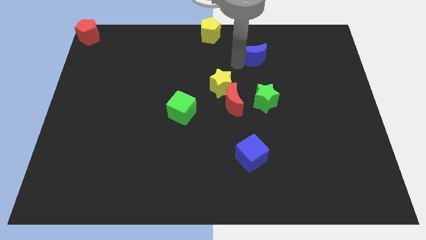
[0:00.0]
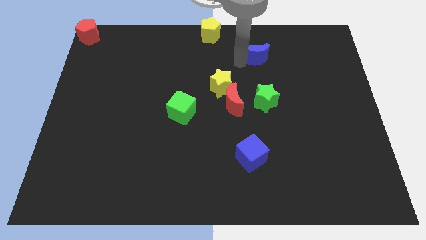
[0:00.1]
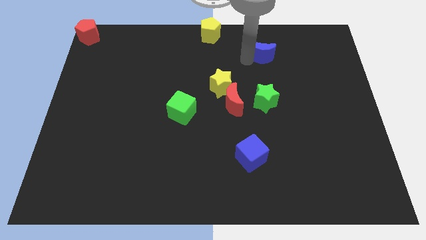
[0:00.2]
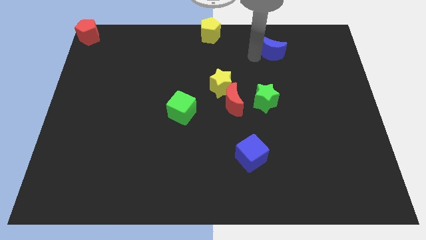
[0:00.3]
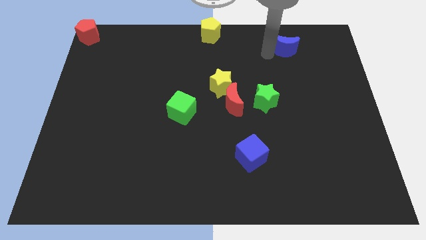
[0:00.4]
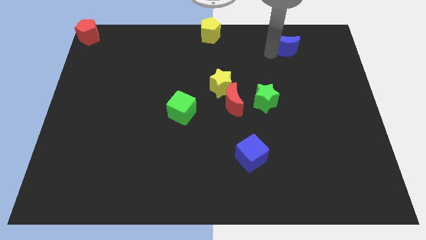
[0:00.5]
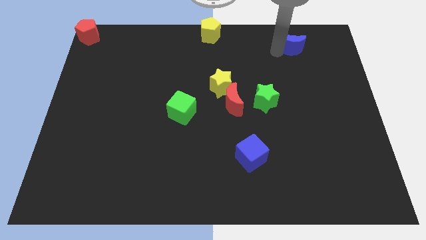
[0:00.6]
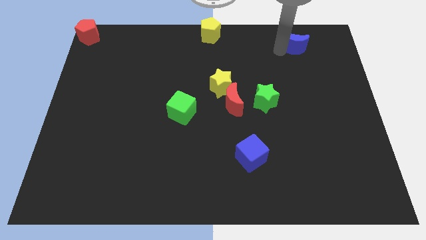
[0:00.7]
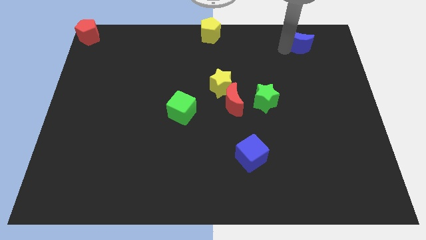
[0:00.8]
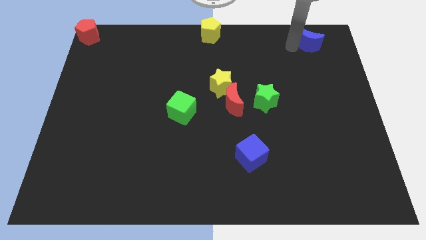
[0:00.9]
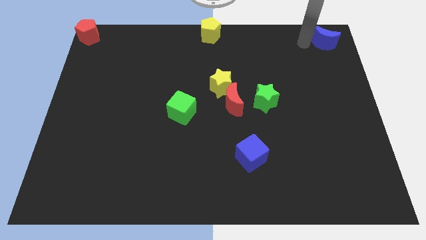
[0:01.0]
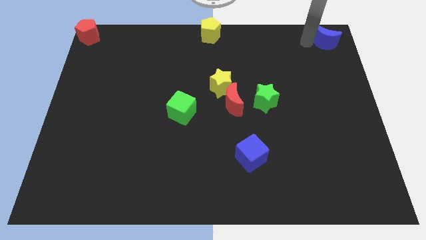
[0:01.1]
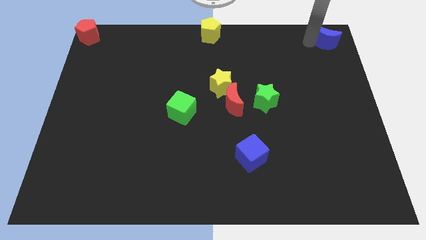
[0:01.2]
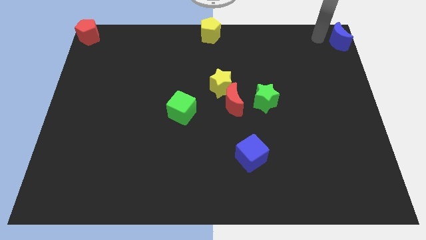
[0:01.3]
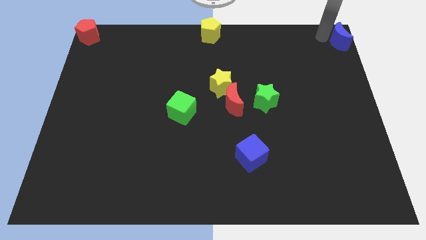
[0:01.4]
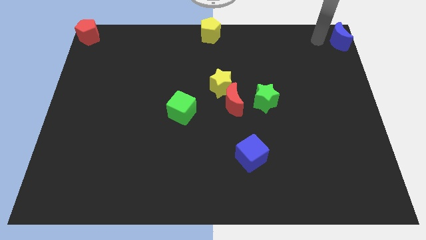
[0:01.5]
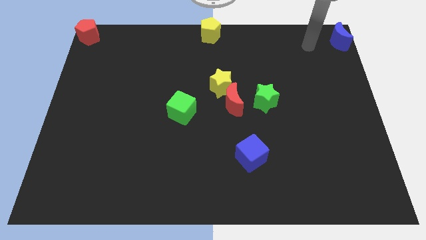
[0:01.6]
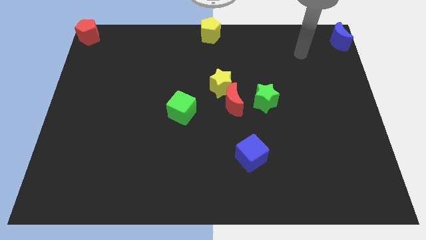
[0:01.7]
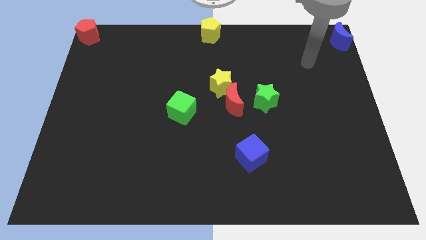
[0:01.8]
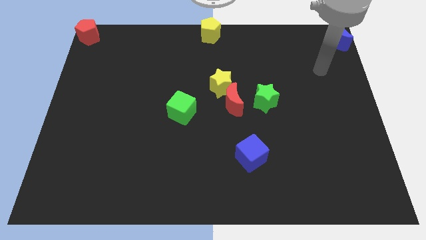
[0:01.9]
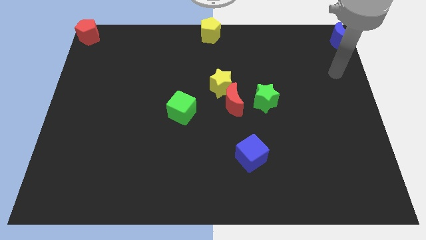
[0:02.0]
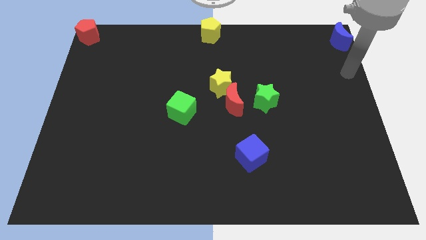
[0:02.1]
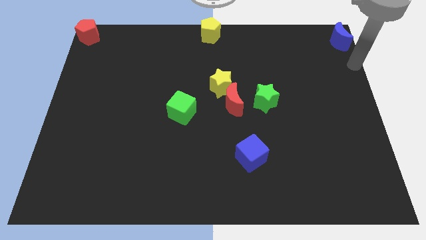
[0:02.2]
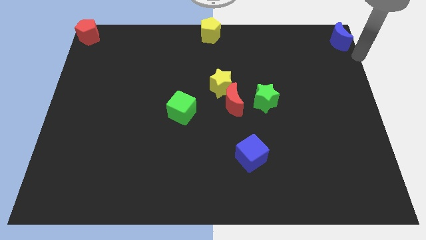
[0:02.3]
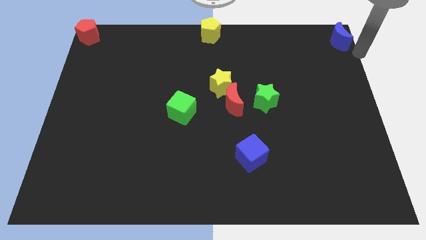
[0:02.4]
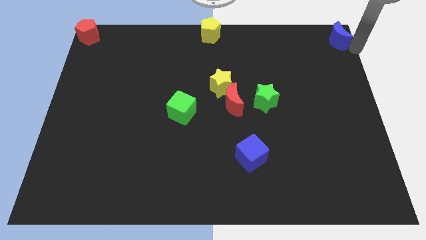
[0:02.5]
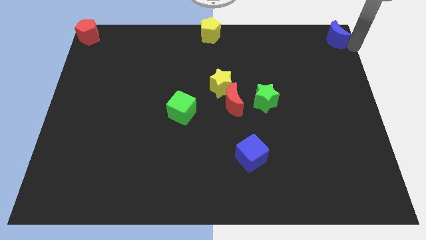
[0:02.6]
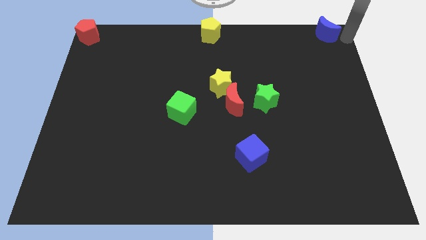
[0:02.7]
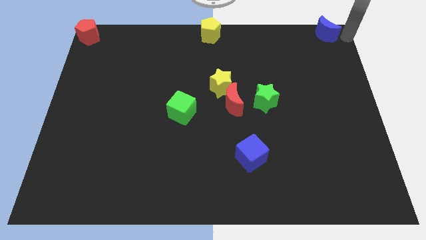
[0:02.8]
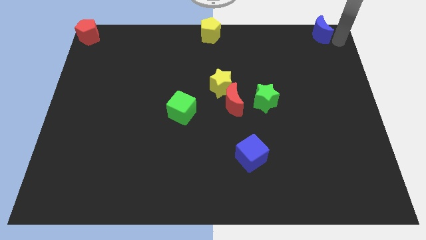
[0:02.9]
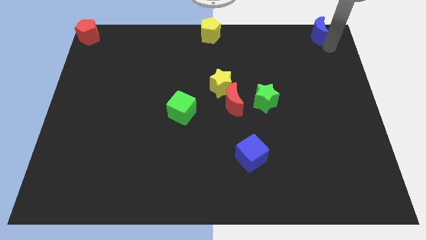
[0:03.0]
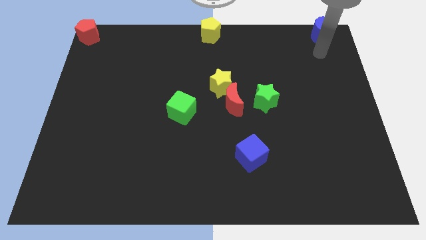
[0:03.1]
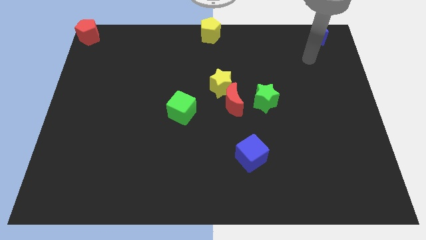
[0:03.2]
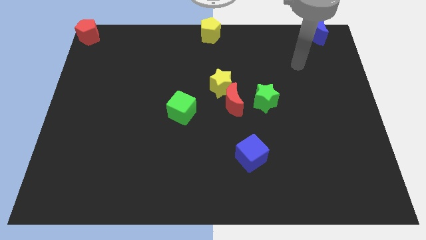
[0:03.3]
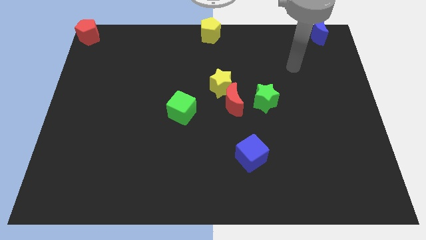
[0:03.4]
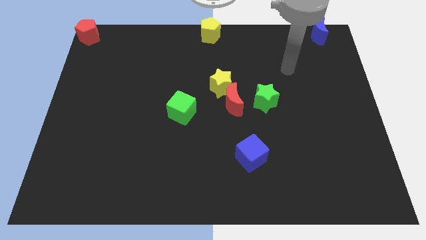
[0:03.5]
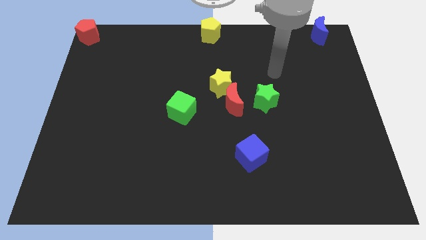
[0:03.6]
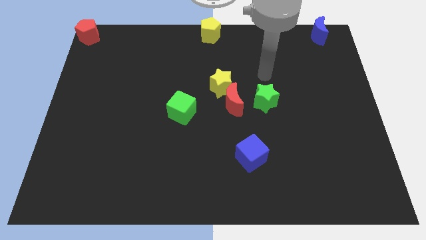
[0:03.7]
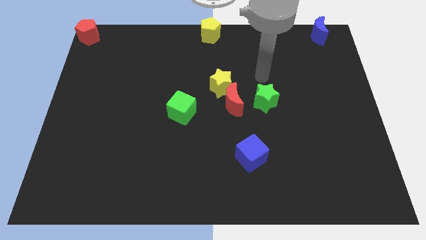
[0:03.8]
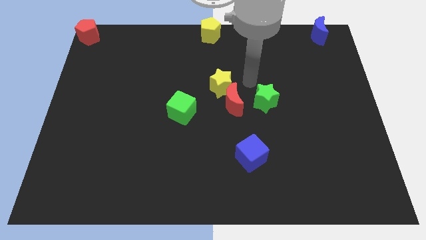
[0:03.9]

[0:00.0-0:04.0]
slightly move the blue moon to the top right

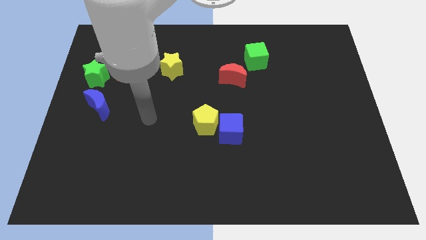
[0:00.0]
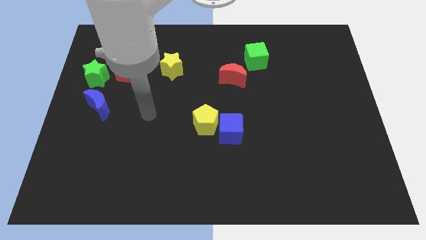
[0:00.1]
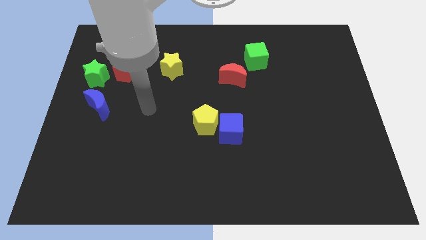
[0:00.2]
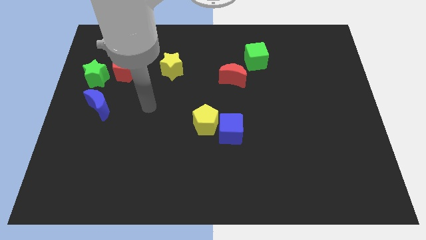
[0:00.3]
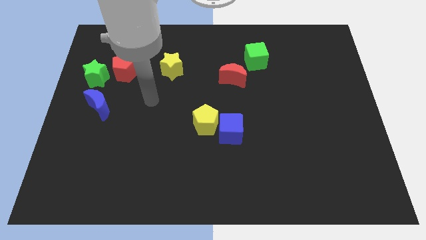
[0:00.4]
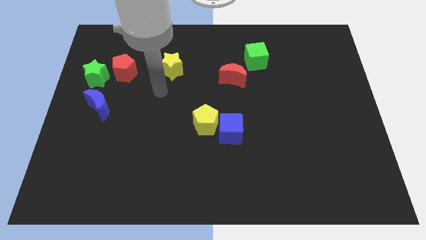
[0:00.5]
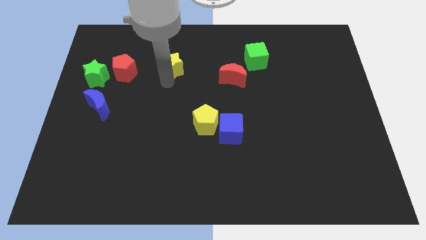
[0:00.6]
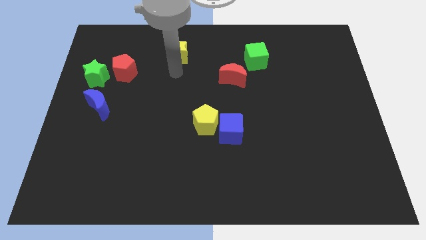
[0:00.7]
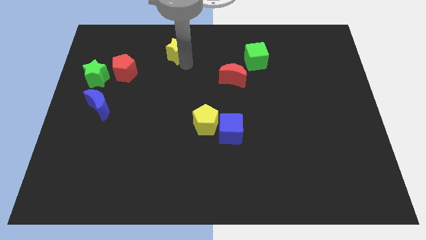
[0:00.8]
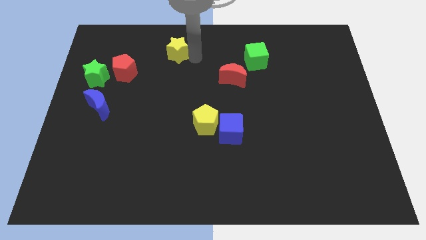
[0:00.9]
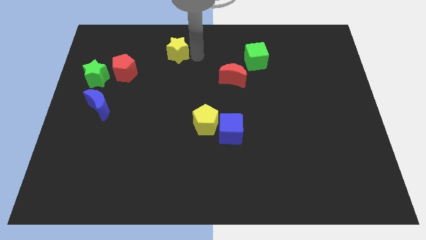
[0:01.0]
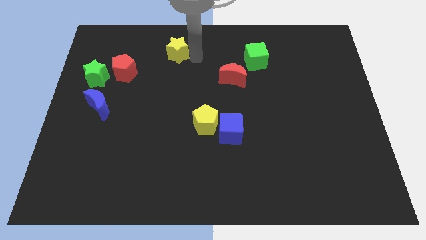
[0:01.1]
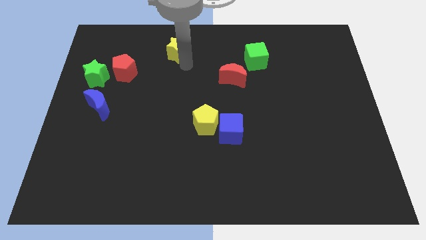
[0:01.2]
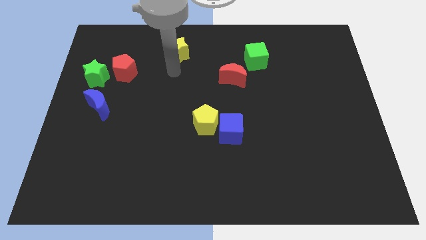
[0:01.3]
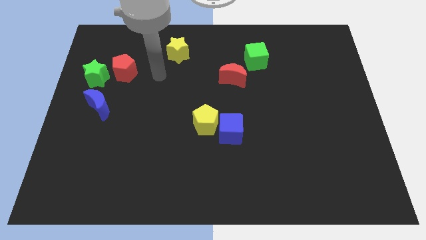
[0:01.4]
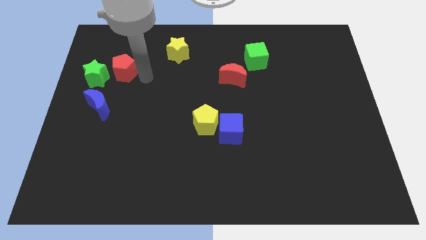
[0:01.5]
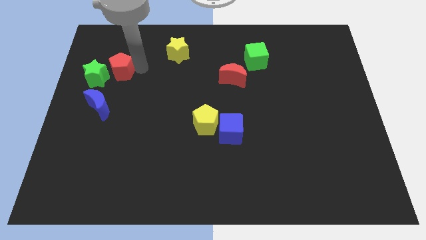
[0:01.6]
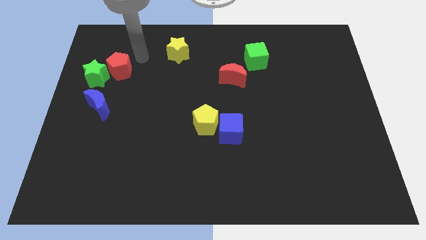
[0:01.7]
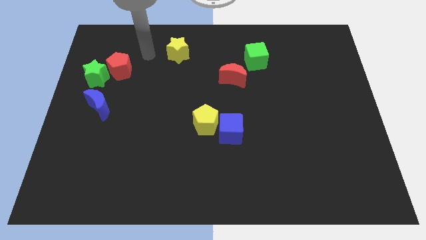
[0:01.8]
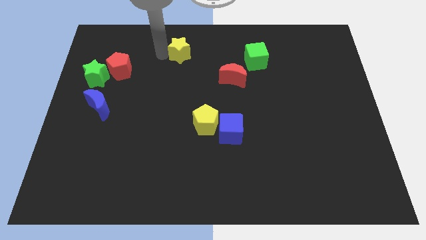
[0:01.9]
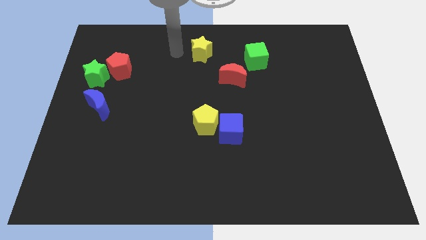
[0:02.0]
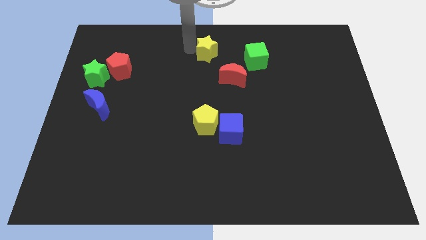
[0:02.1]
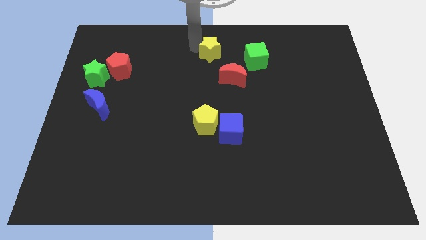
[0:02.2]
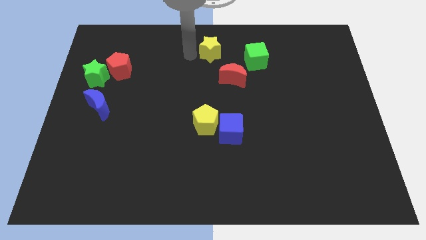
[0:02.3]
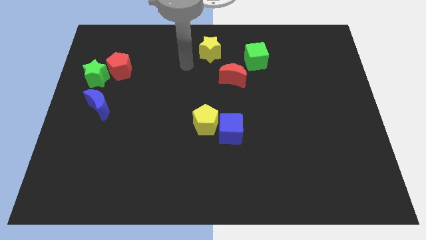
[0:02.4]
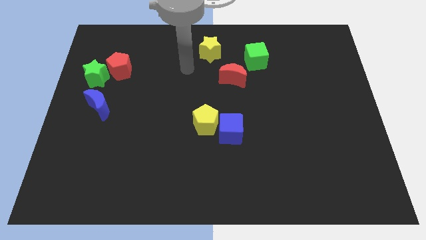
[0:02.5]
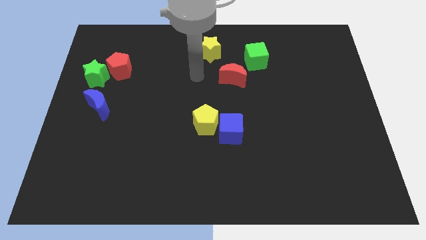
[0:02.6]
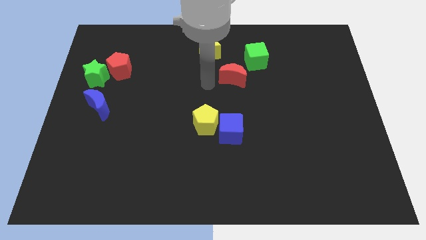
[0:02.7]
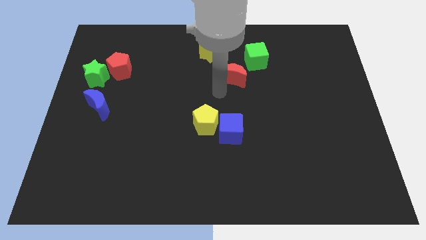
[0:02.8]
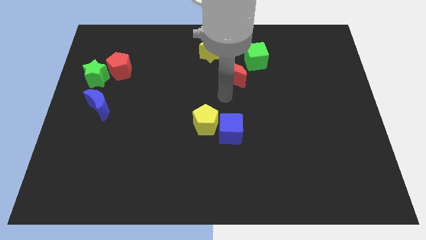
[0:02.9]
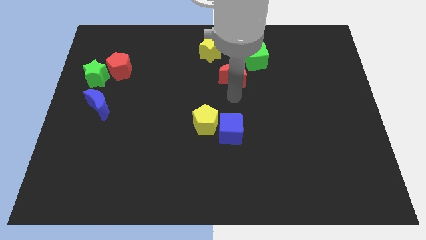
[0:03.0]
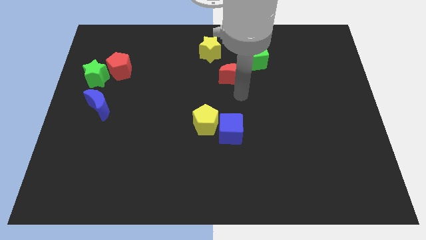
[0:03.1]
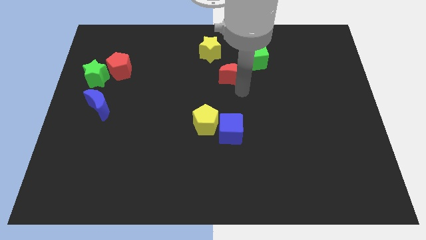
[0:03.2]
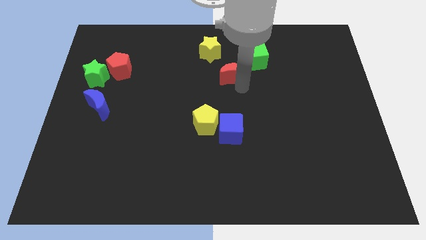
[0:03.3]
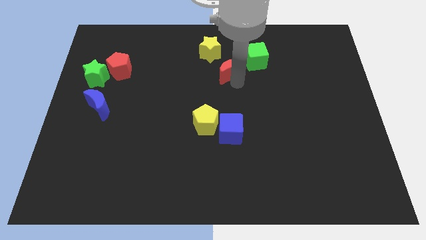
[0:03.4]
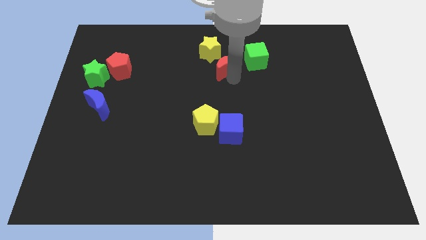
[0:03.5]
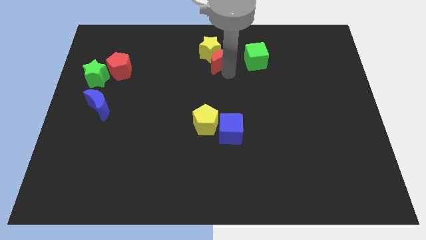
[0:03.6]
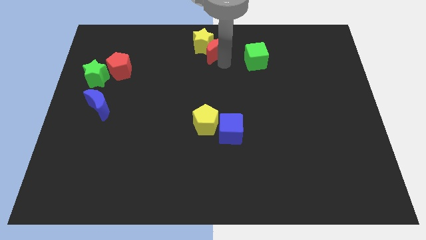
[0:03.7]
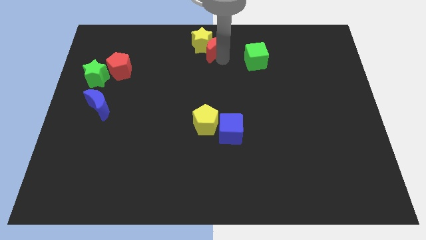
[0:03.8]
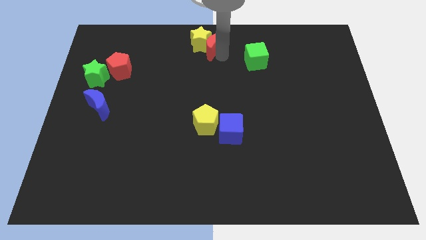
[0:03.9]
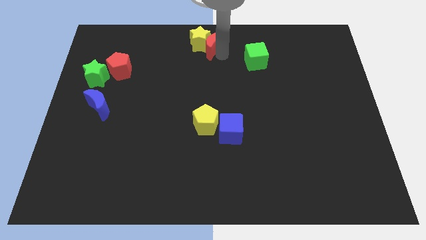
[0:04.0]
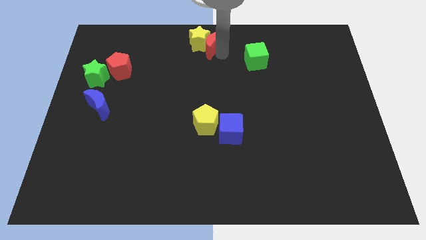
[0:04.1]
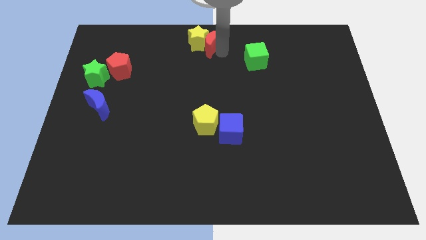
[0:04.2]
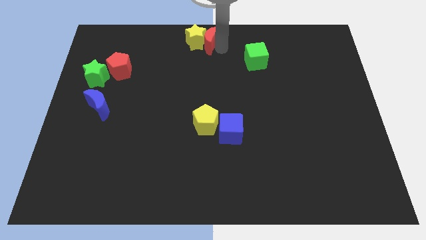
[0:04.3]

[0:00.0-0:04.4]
move the red moon into the yellow star towards the top center

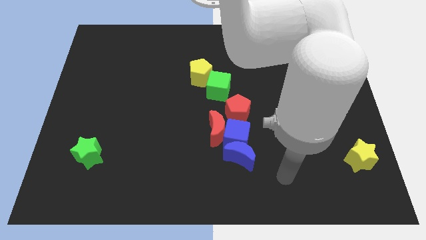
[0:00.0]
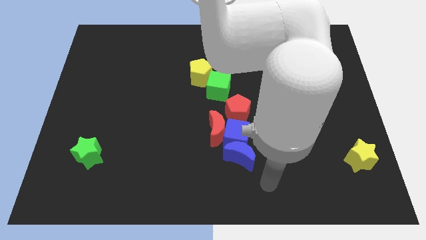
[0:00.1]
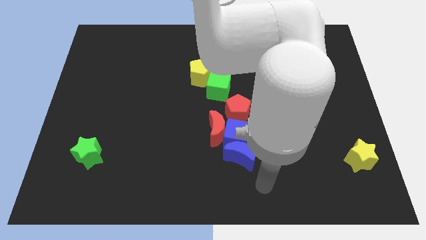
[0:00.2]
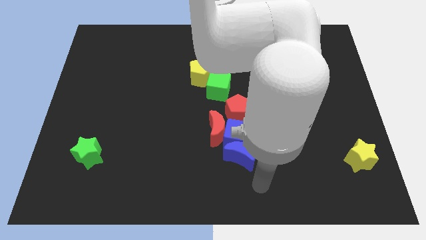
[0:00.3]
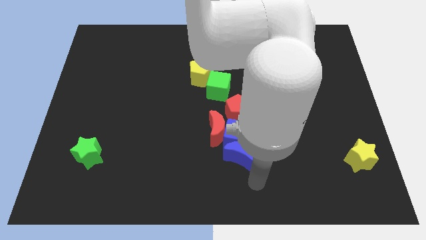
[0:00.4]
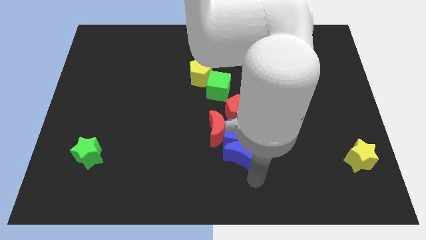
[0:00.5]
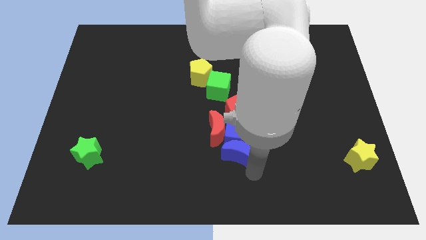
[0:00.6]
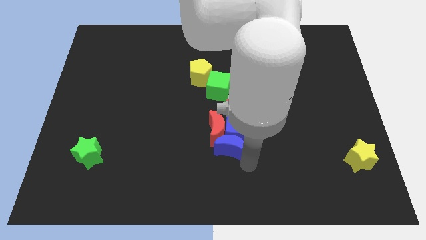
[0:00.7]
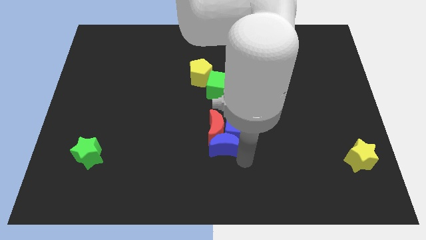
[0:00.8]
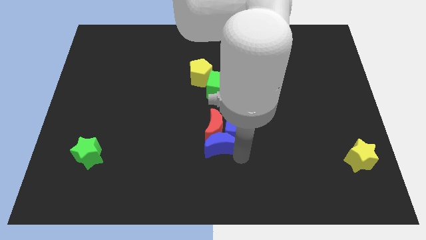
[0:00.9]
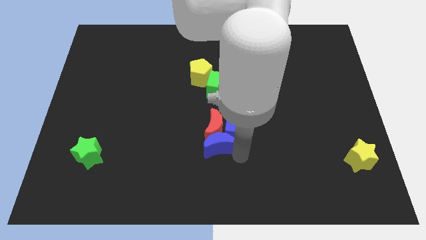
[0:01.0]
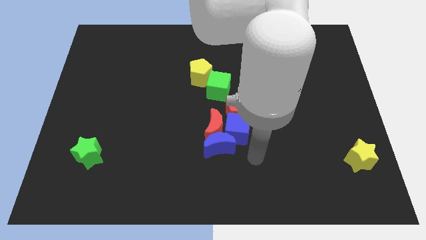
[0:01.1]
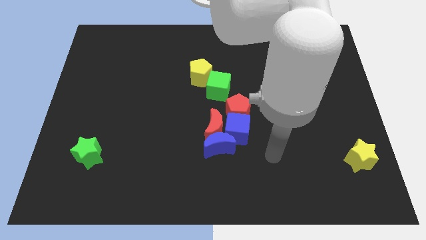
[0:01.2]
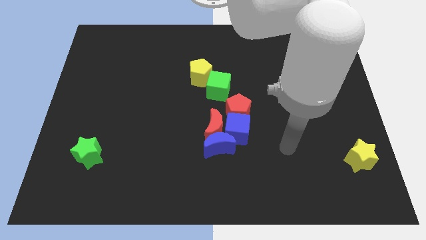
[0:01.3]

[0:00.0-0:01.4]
slide the blue moon diagonally on the bottom right side of the red crescent
